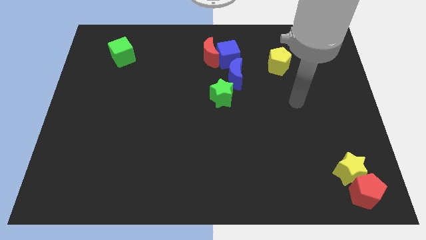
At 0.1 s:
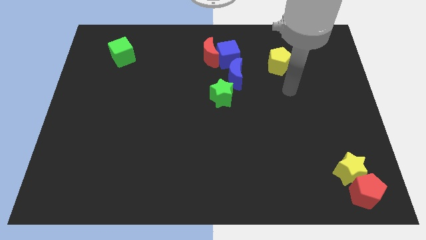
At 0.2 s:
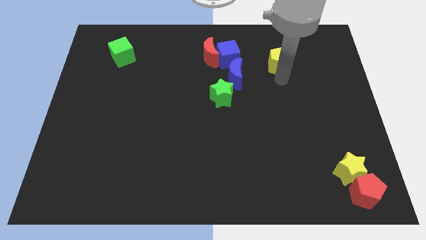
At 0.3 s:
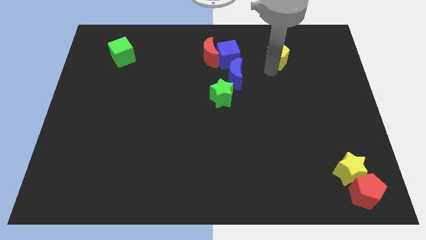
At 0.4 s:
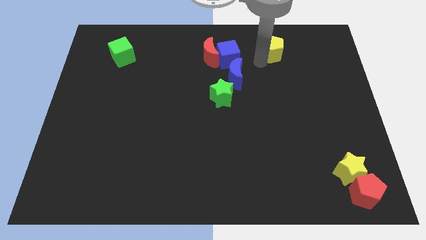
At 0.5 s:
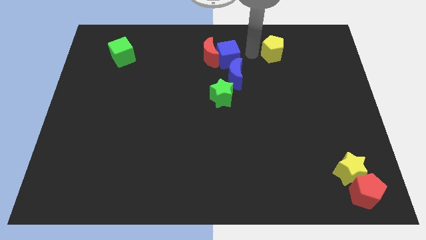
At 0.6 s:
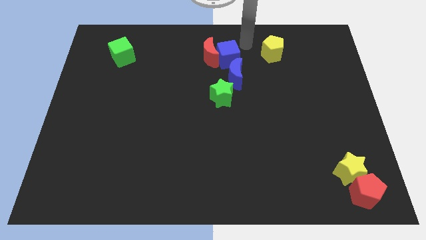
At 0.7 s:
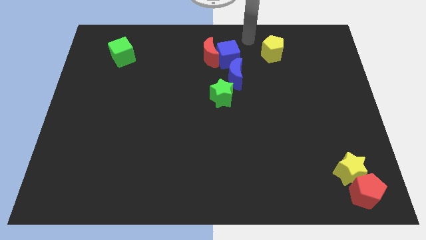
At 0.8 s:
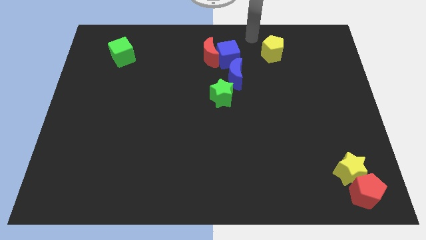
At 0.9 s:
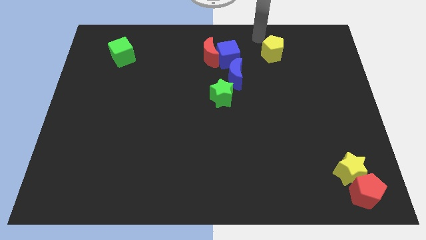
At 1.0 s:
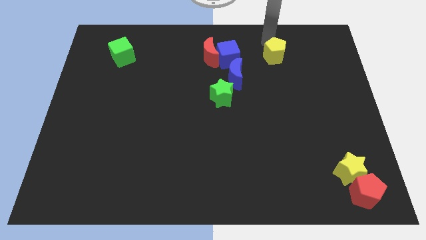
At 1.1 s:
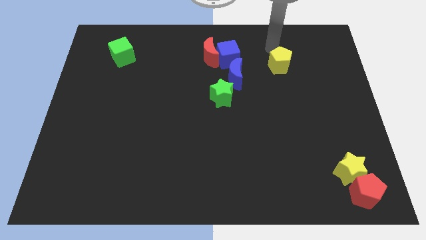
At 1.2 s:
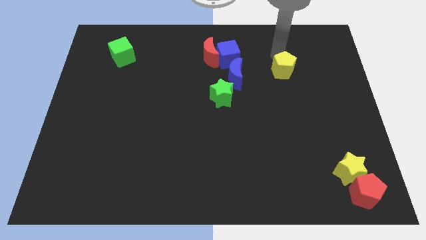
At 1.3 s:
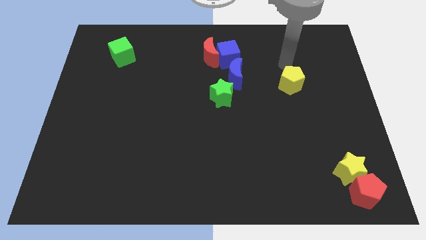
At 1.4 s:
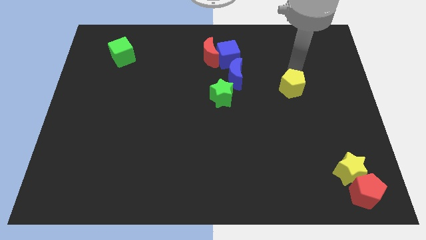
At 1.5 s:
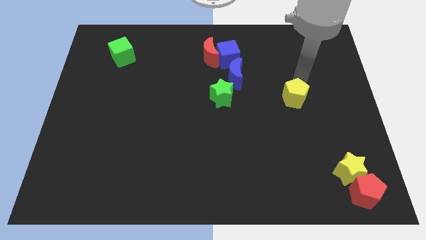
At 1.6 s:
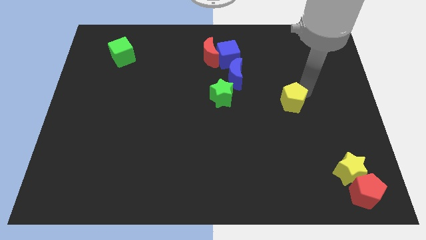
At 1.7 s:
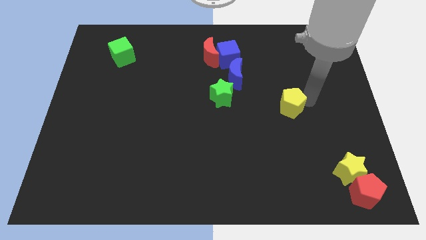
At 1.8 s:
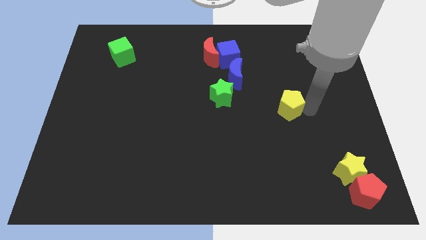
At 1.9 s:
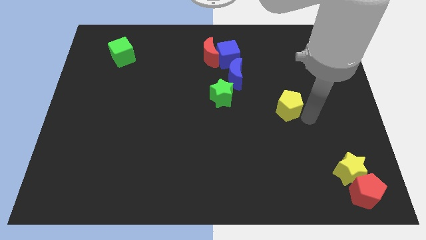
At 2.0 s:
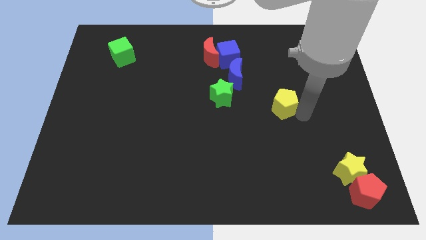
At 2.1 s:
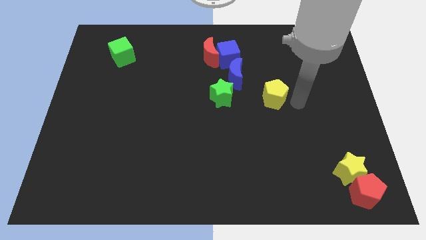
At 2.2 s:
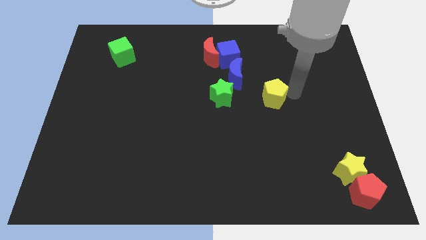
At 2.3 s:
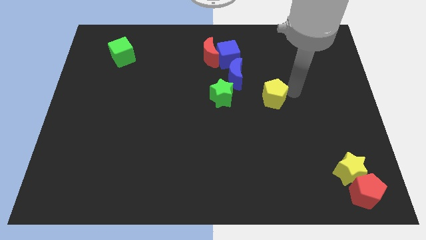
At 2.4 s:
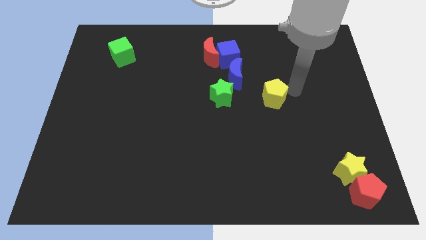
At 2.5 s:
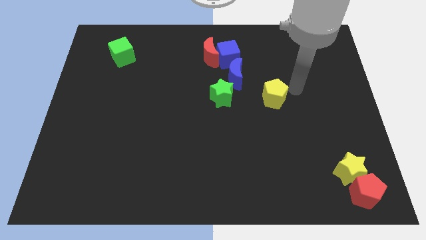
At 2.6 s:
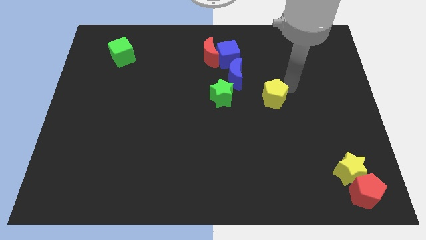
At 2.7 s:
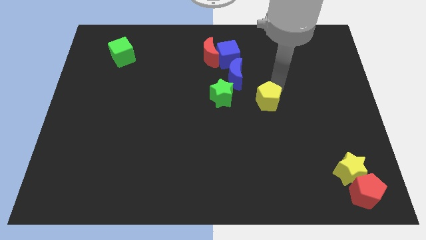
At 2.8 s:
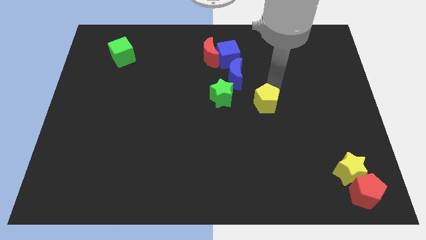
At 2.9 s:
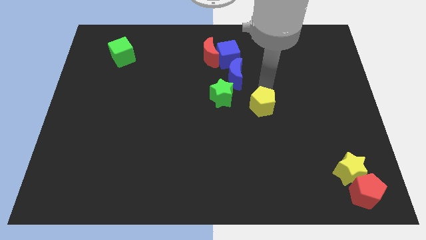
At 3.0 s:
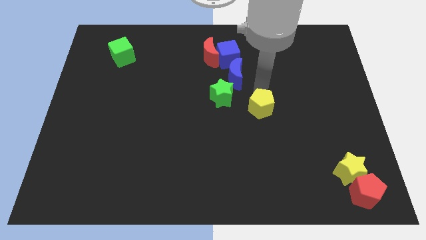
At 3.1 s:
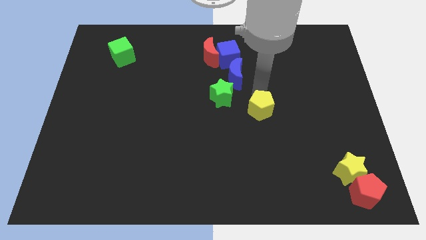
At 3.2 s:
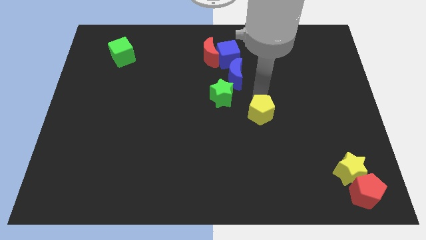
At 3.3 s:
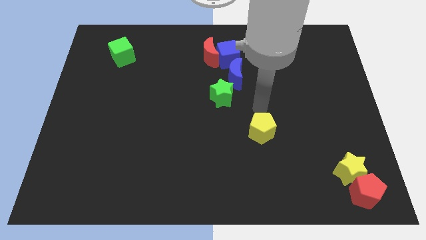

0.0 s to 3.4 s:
place the yellow pentagon between the green star and yellow star

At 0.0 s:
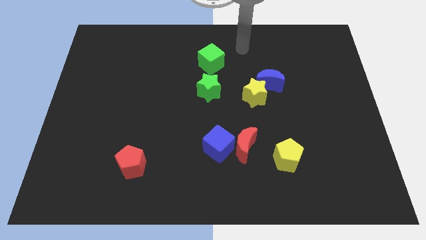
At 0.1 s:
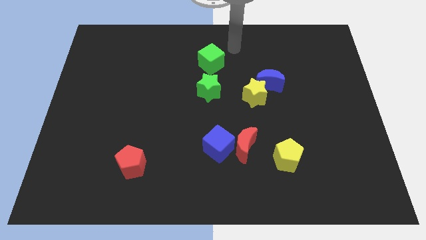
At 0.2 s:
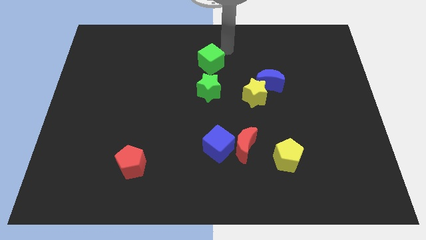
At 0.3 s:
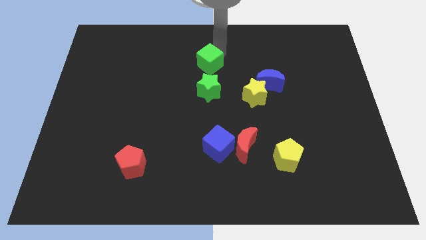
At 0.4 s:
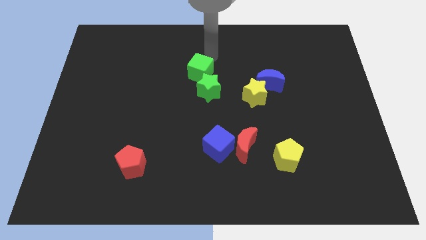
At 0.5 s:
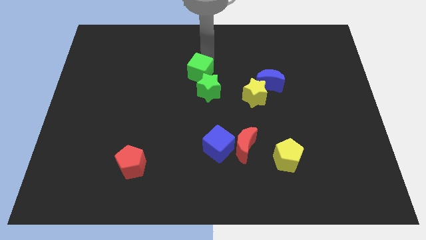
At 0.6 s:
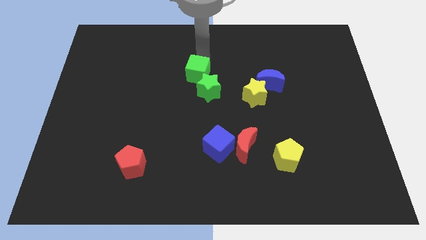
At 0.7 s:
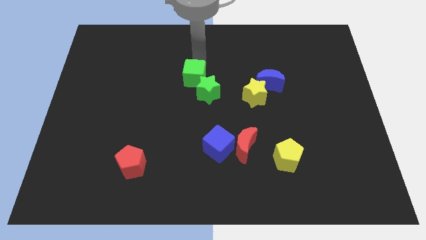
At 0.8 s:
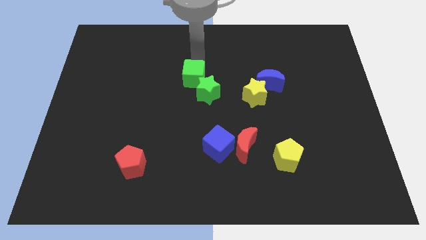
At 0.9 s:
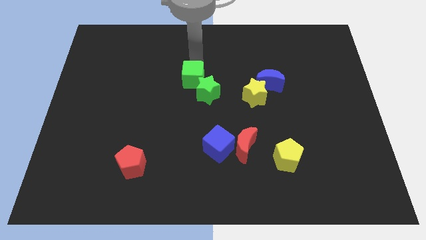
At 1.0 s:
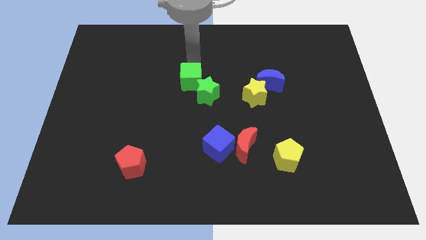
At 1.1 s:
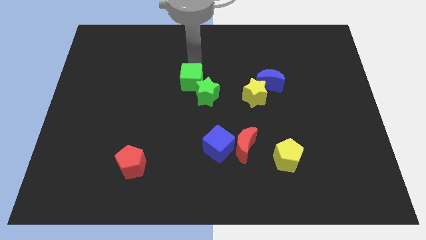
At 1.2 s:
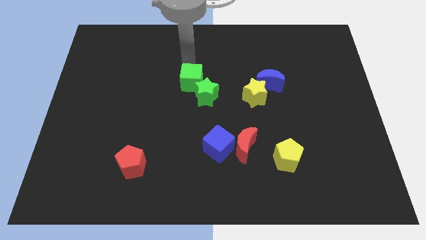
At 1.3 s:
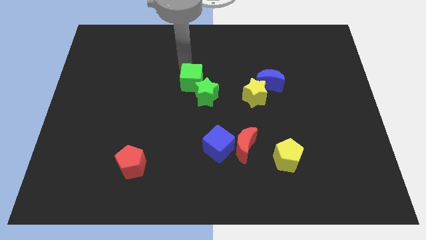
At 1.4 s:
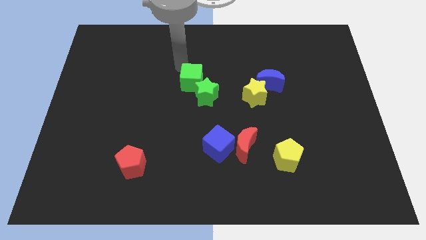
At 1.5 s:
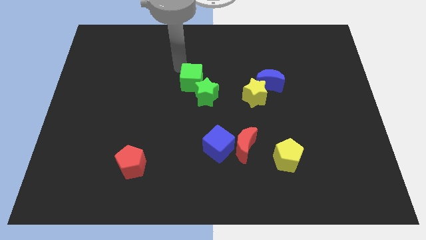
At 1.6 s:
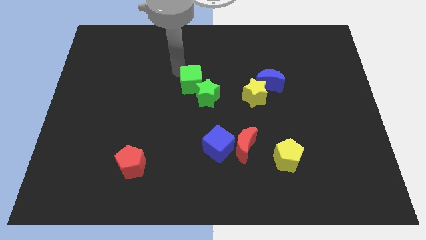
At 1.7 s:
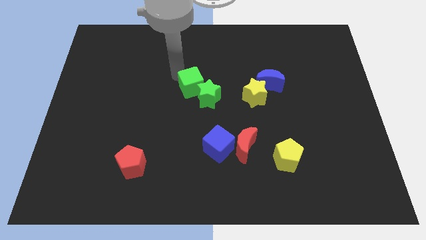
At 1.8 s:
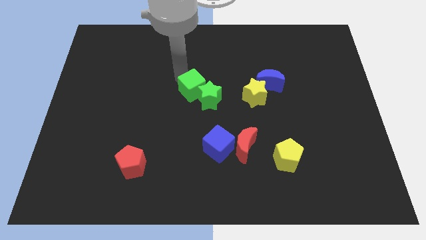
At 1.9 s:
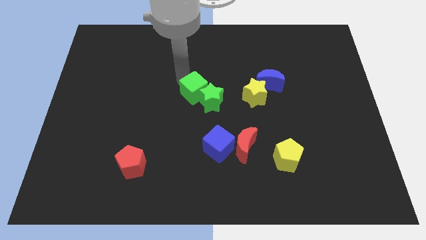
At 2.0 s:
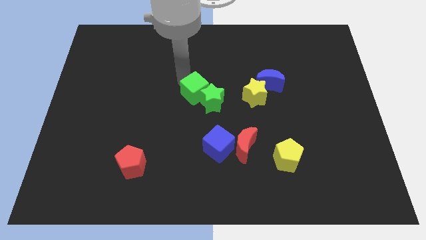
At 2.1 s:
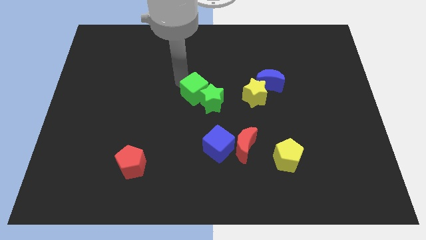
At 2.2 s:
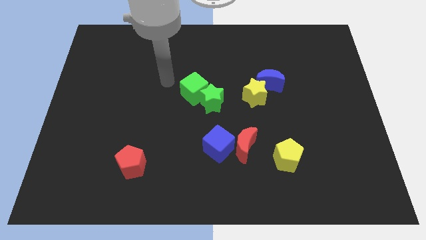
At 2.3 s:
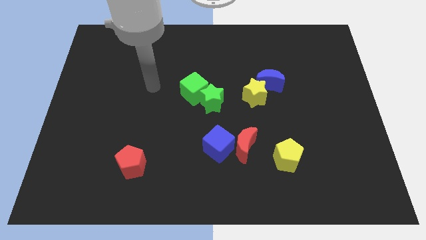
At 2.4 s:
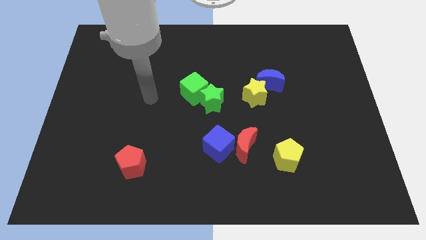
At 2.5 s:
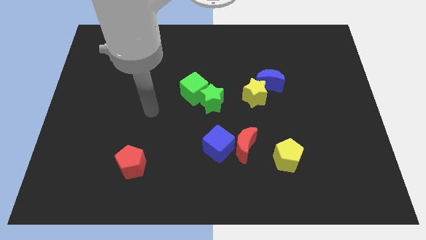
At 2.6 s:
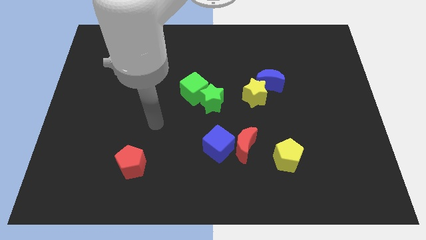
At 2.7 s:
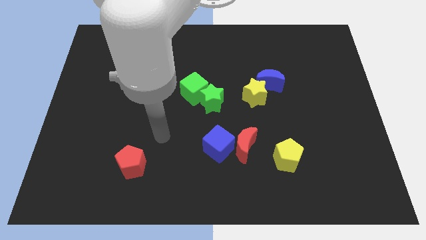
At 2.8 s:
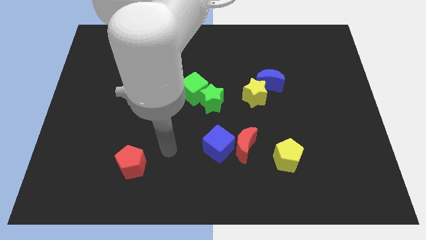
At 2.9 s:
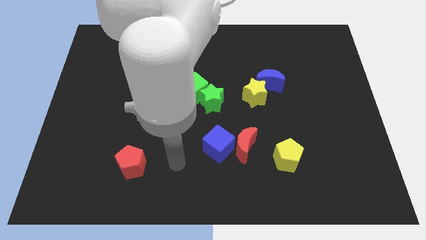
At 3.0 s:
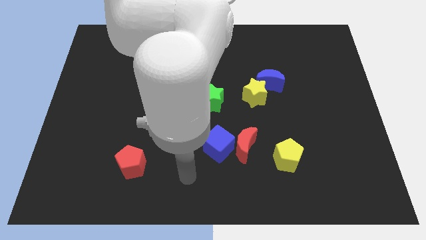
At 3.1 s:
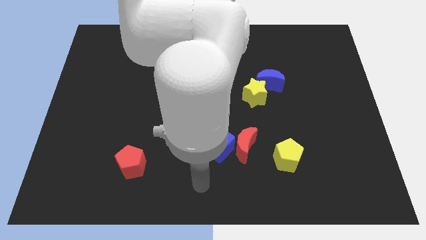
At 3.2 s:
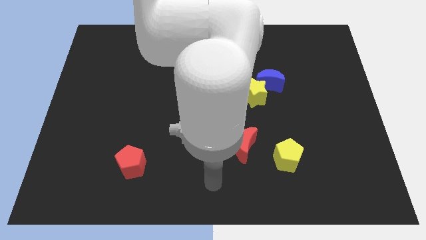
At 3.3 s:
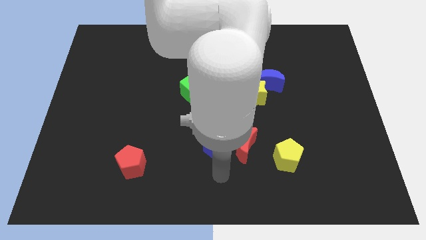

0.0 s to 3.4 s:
move your arm to the bottom of the blue cube

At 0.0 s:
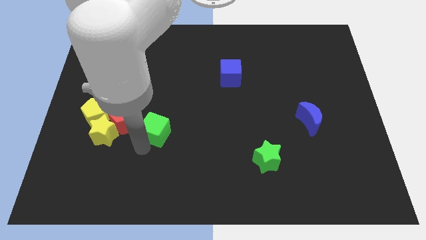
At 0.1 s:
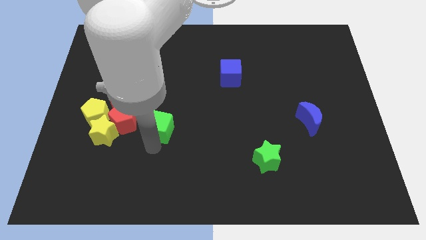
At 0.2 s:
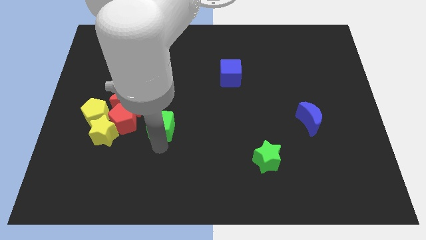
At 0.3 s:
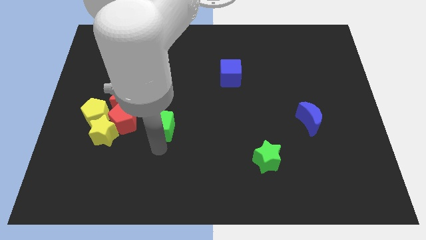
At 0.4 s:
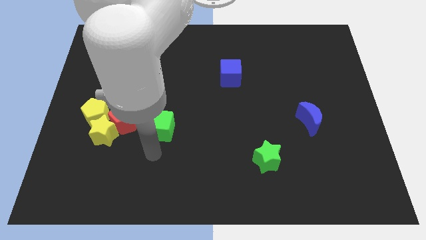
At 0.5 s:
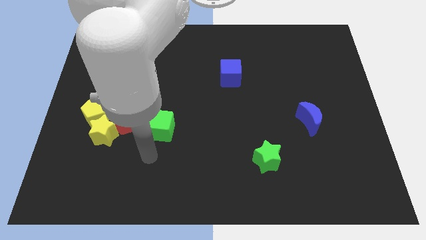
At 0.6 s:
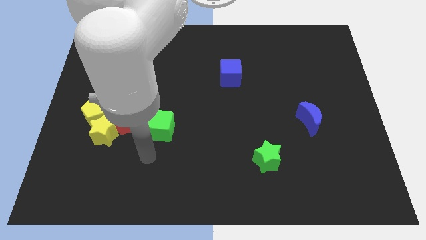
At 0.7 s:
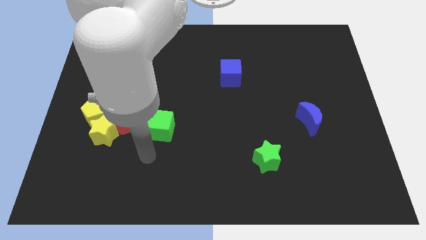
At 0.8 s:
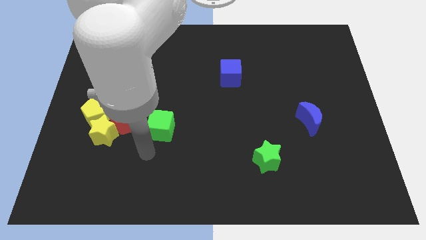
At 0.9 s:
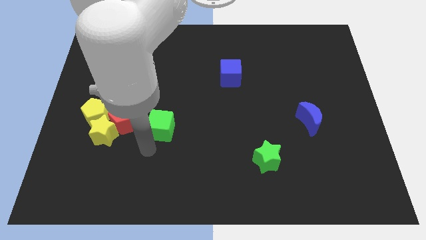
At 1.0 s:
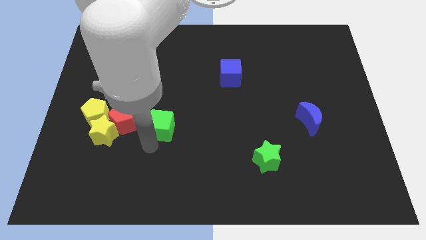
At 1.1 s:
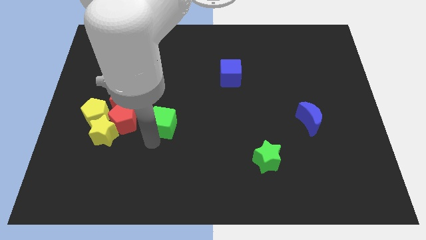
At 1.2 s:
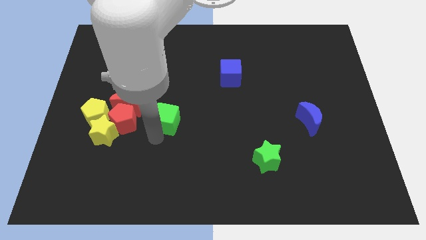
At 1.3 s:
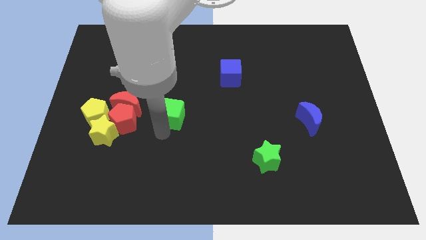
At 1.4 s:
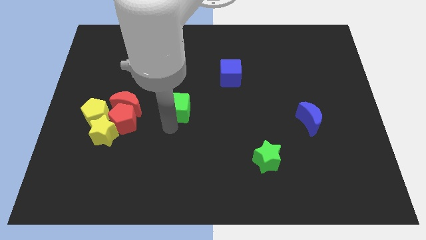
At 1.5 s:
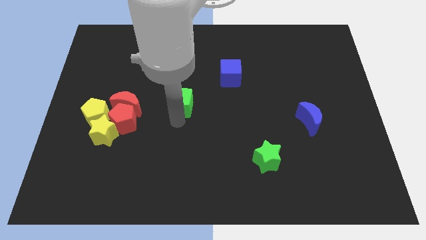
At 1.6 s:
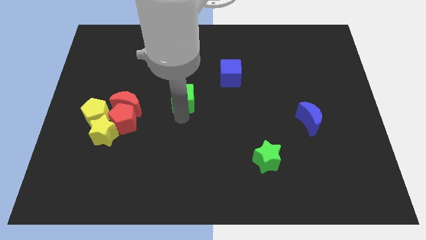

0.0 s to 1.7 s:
push the green cube towards the blue cube

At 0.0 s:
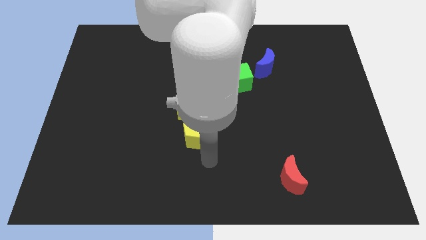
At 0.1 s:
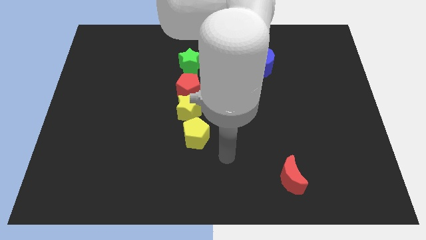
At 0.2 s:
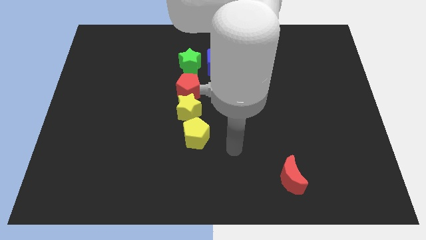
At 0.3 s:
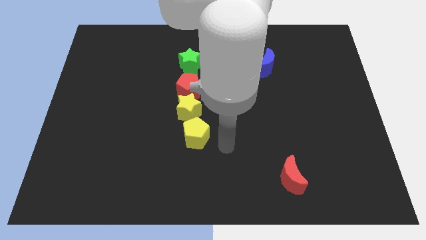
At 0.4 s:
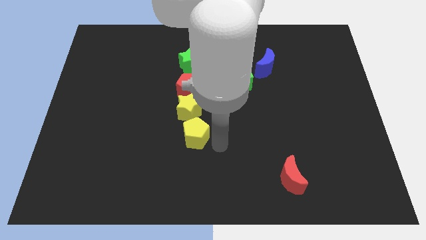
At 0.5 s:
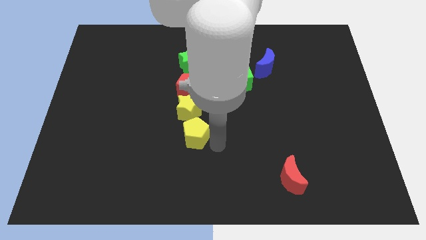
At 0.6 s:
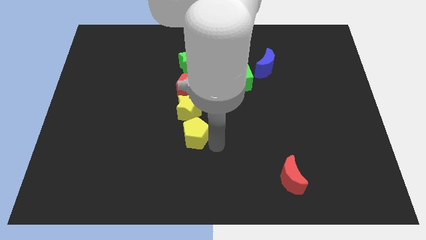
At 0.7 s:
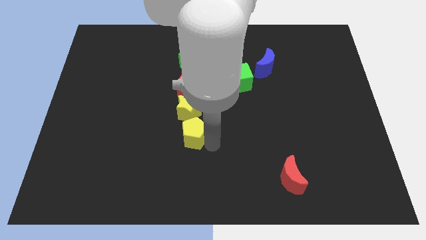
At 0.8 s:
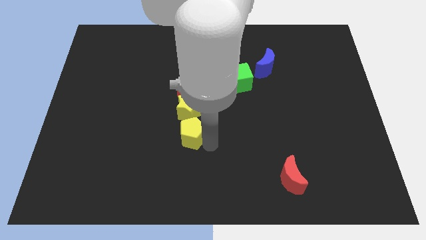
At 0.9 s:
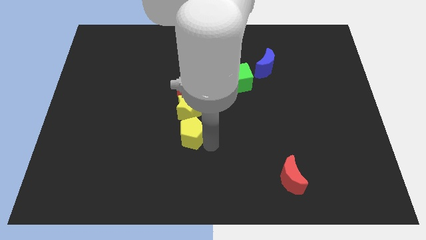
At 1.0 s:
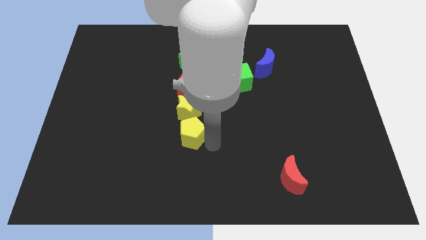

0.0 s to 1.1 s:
move the yellow pentagon at the bottom of yellow star
